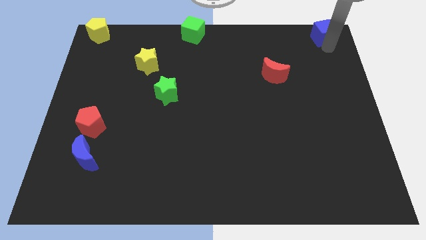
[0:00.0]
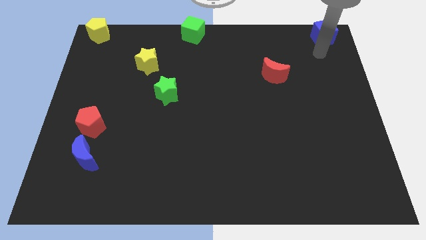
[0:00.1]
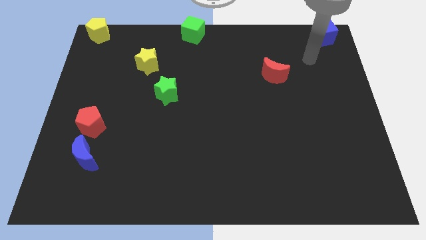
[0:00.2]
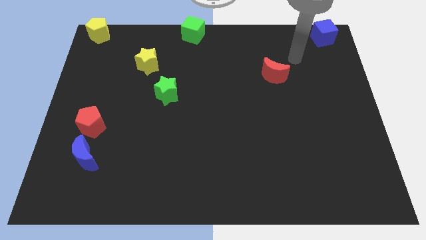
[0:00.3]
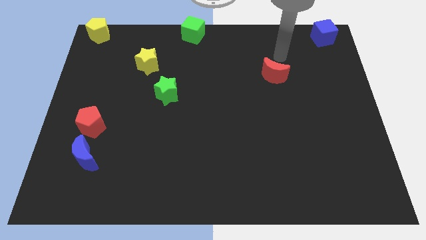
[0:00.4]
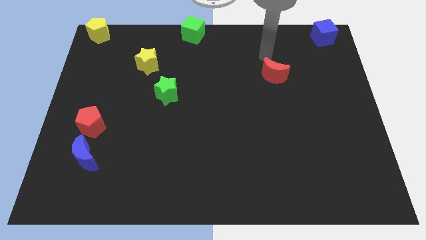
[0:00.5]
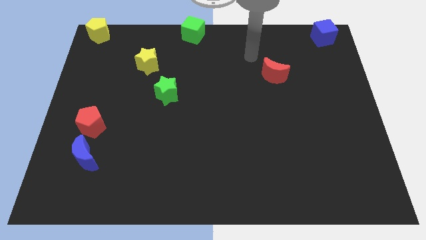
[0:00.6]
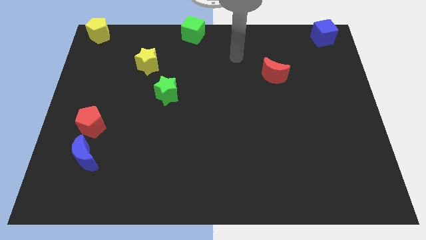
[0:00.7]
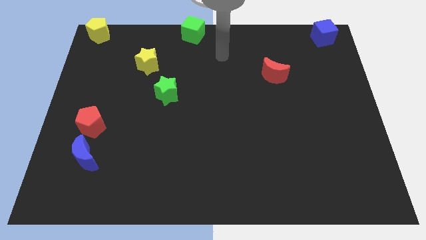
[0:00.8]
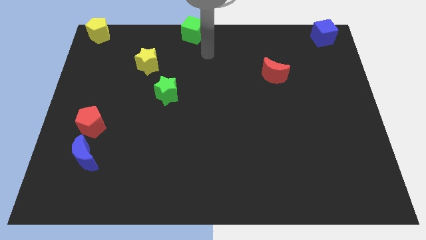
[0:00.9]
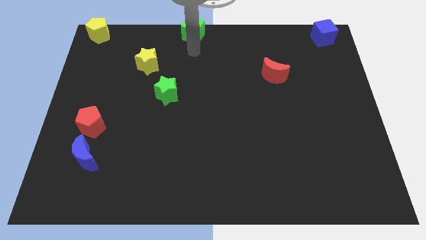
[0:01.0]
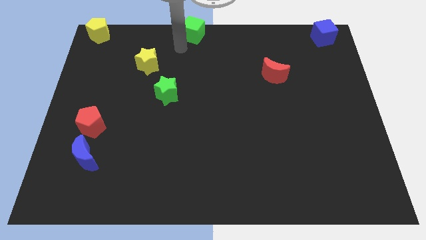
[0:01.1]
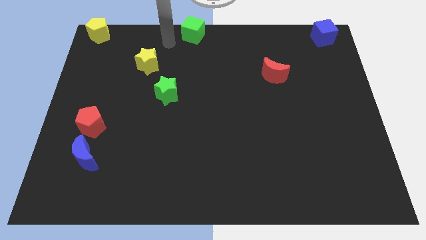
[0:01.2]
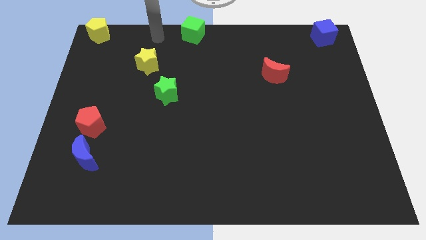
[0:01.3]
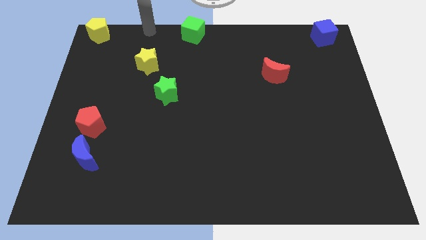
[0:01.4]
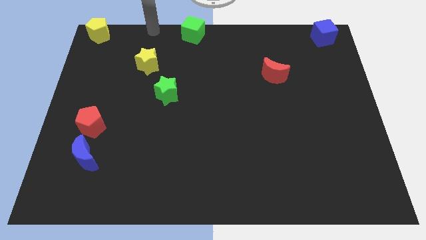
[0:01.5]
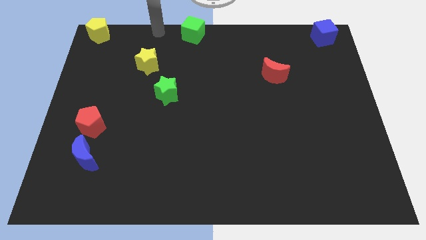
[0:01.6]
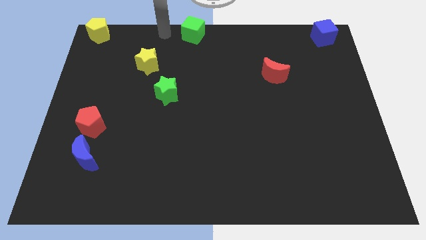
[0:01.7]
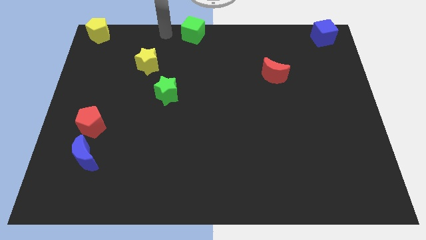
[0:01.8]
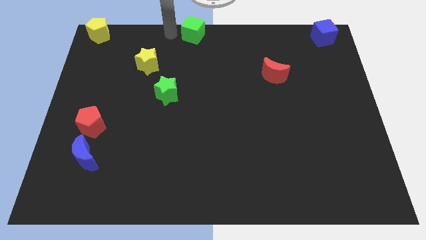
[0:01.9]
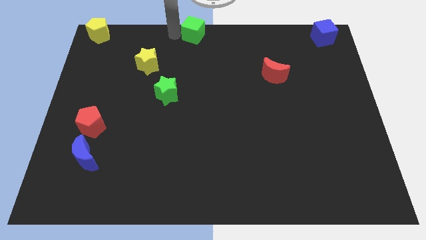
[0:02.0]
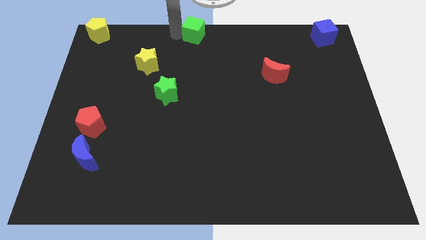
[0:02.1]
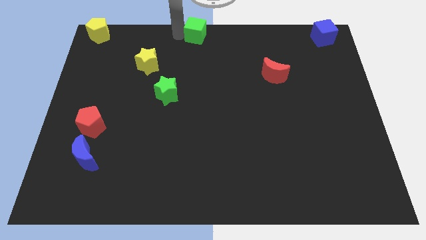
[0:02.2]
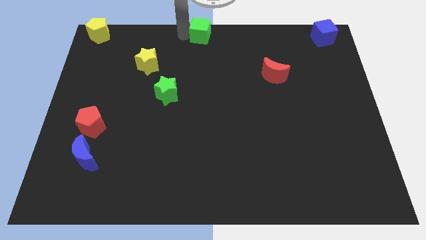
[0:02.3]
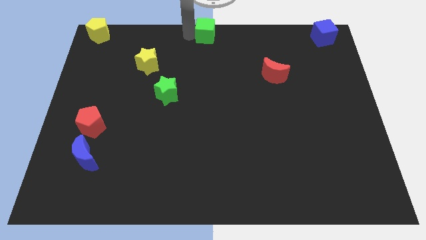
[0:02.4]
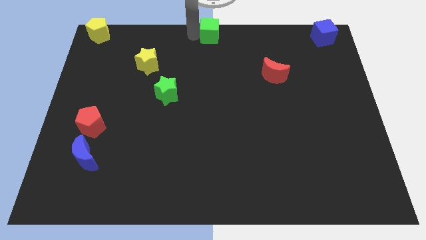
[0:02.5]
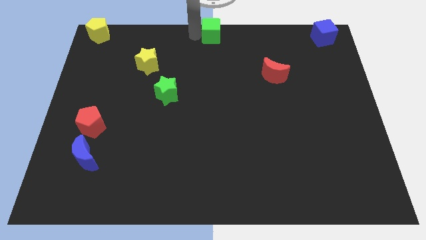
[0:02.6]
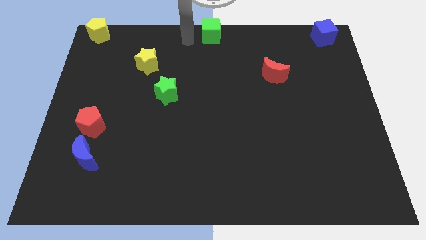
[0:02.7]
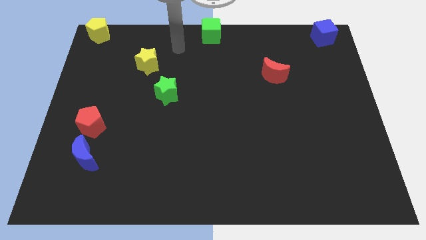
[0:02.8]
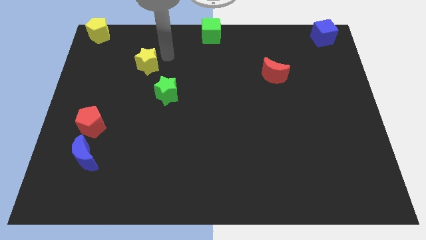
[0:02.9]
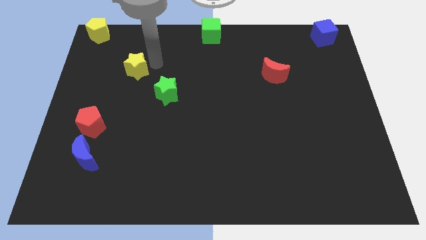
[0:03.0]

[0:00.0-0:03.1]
move the green cube to the top center of the board

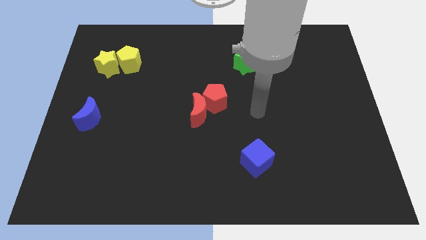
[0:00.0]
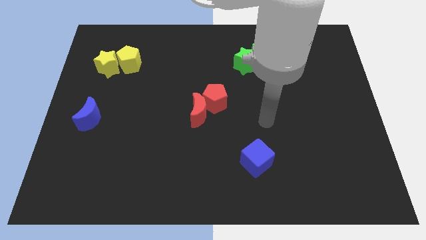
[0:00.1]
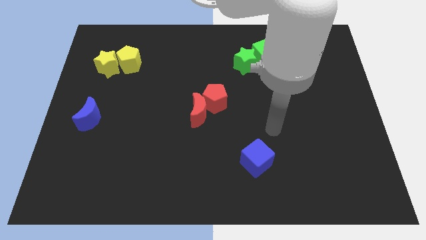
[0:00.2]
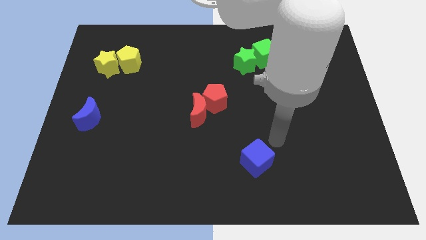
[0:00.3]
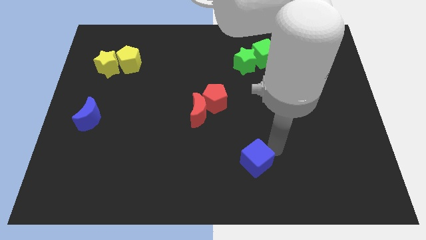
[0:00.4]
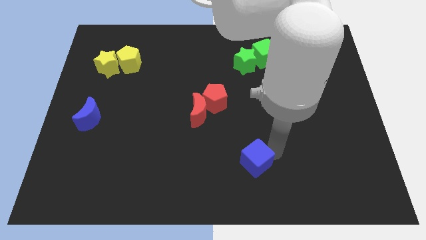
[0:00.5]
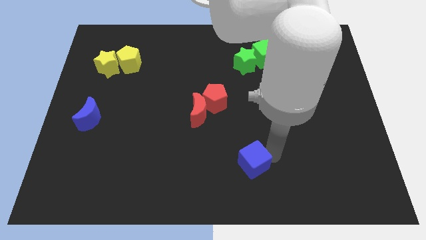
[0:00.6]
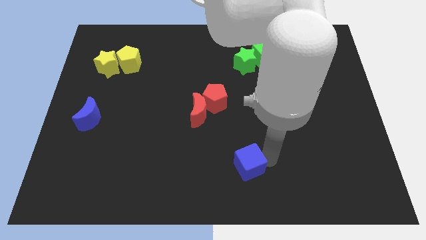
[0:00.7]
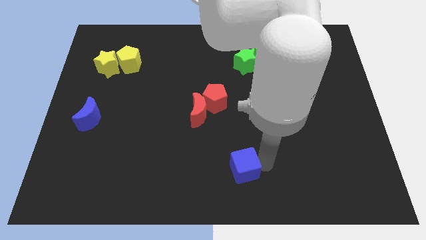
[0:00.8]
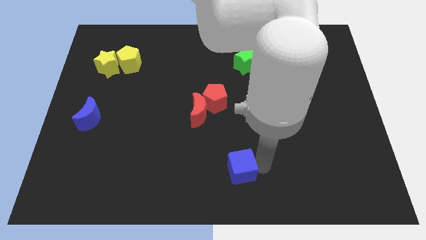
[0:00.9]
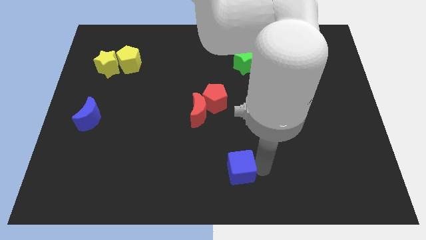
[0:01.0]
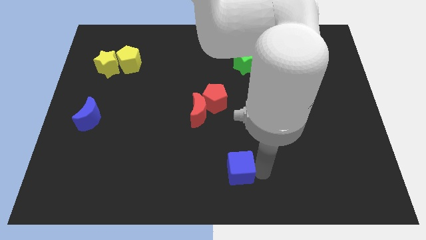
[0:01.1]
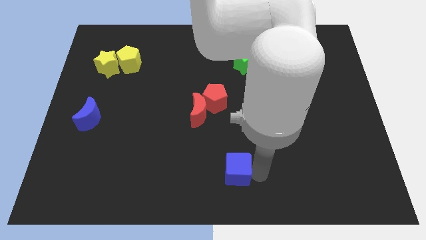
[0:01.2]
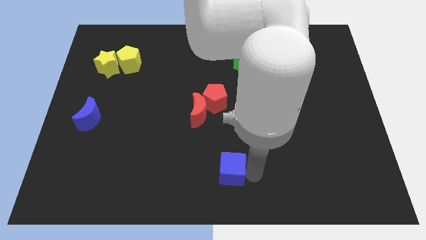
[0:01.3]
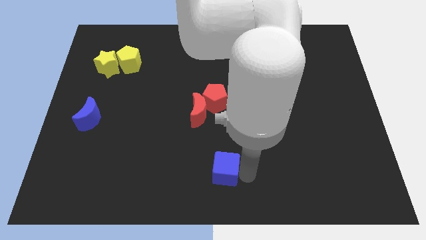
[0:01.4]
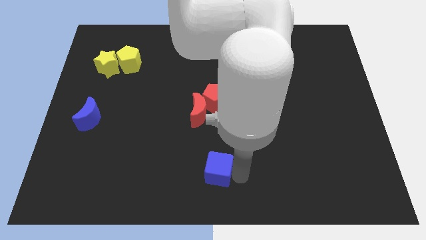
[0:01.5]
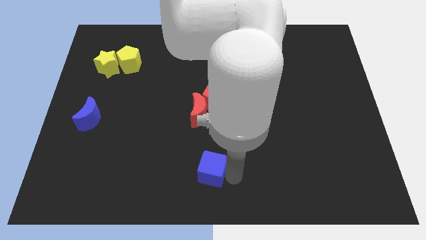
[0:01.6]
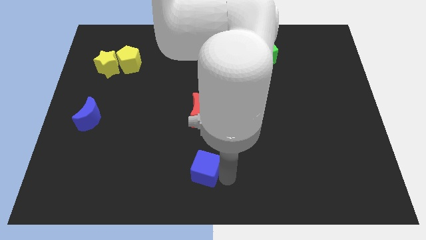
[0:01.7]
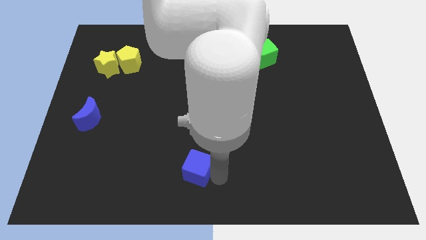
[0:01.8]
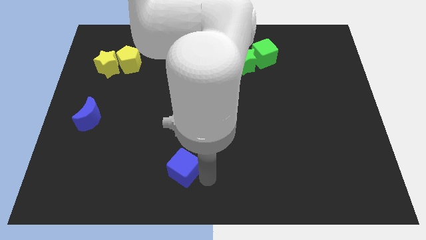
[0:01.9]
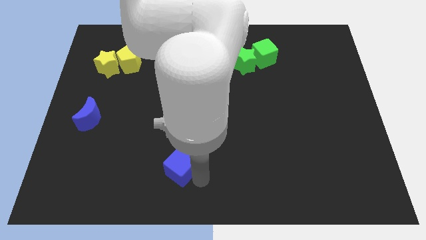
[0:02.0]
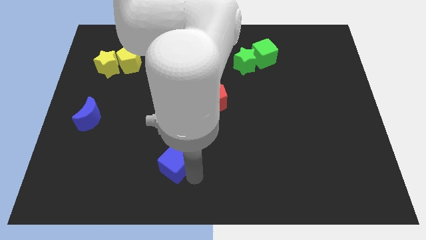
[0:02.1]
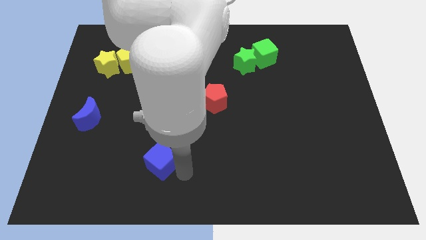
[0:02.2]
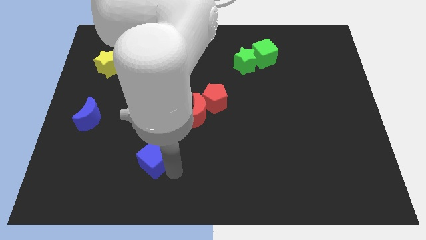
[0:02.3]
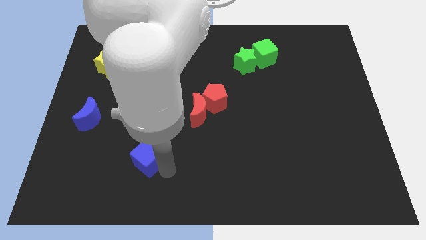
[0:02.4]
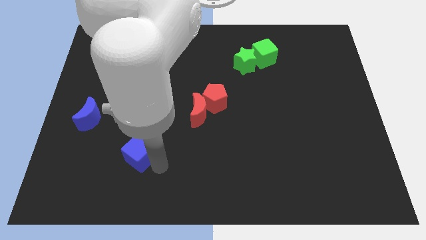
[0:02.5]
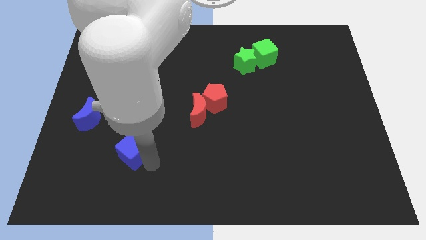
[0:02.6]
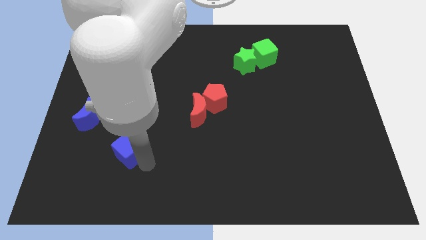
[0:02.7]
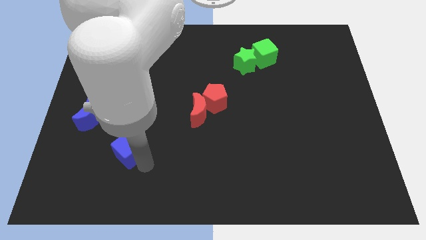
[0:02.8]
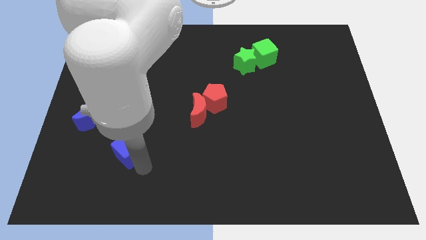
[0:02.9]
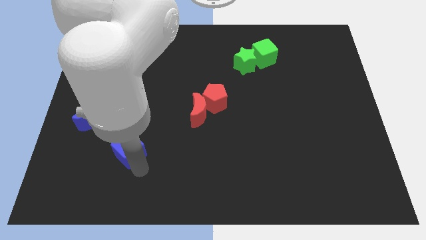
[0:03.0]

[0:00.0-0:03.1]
push the blue cube towards left

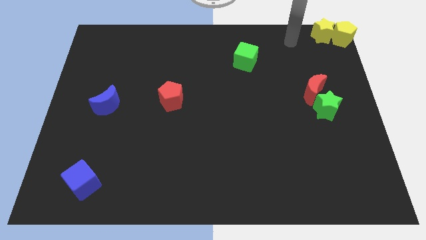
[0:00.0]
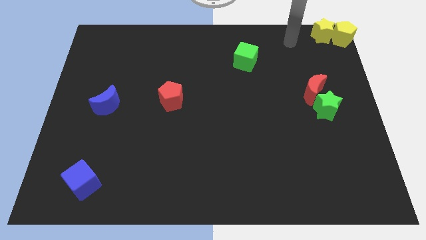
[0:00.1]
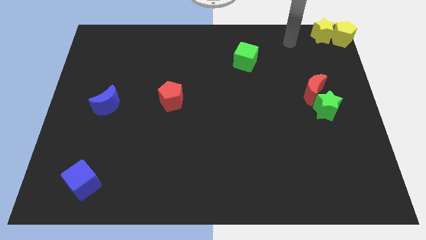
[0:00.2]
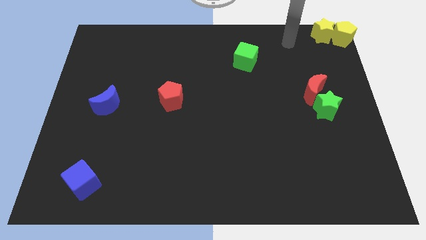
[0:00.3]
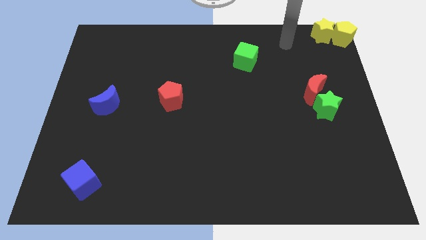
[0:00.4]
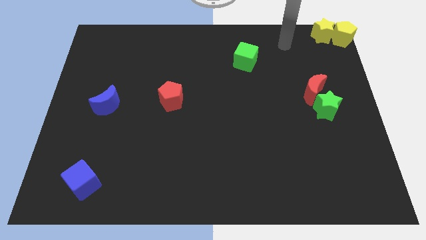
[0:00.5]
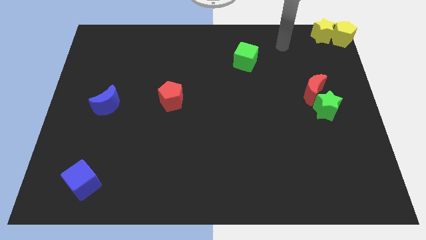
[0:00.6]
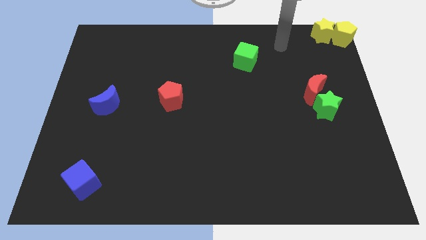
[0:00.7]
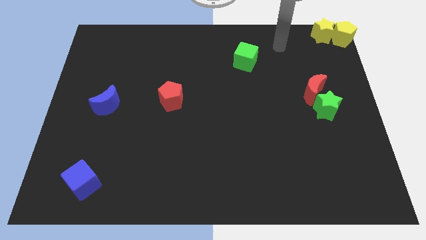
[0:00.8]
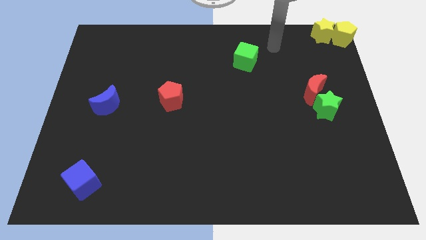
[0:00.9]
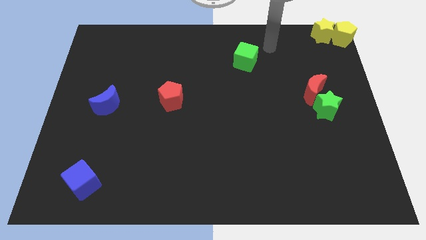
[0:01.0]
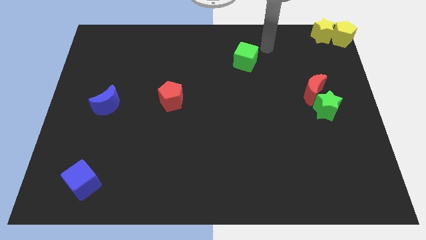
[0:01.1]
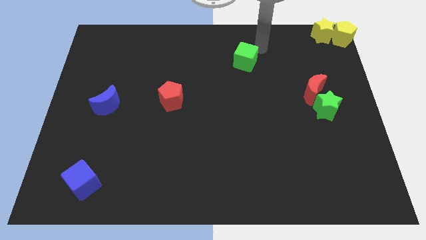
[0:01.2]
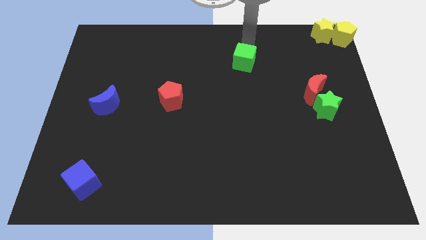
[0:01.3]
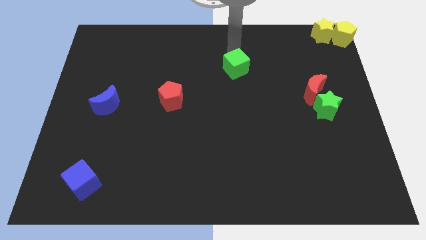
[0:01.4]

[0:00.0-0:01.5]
slightly push the green cube

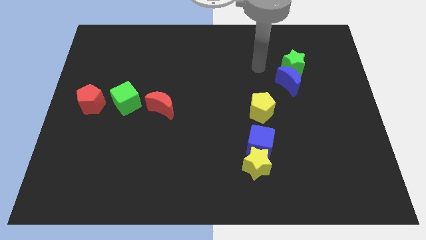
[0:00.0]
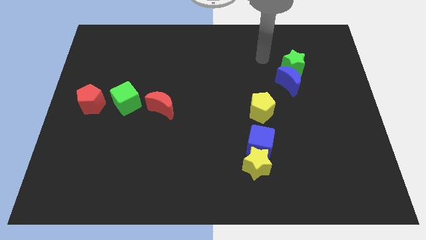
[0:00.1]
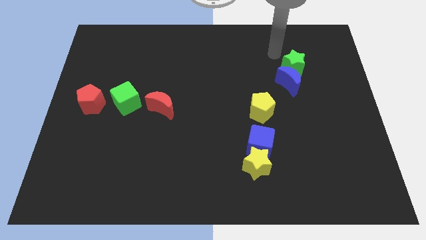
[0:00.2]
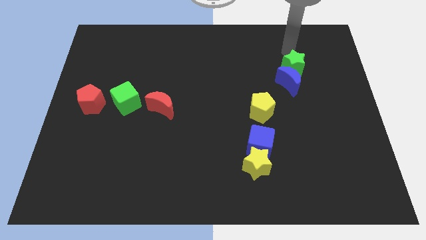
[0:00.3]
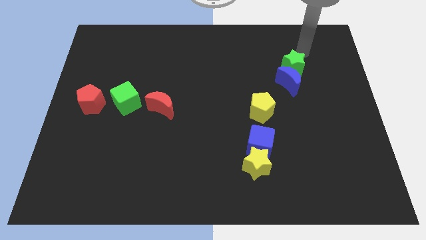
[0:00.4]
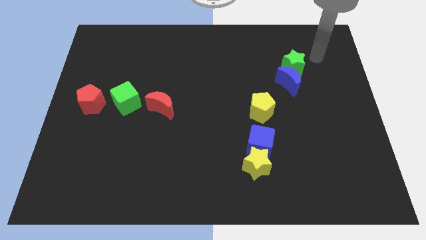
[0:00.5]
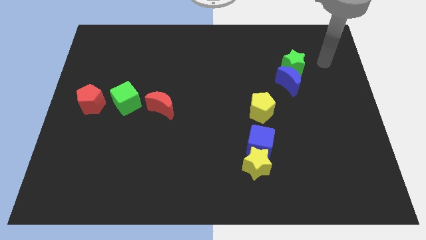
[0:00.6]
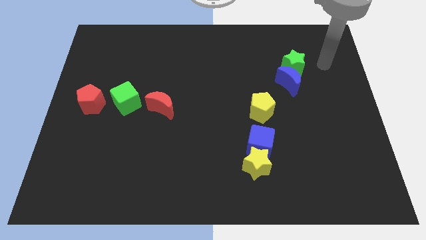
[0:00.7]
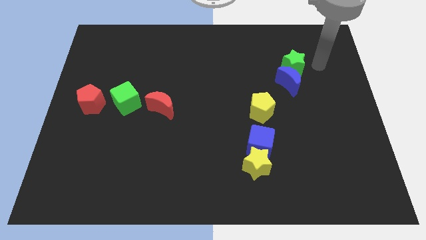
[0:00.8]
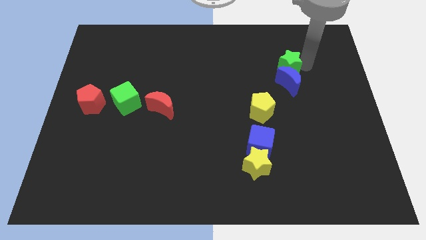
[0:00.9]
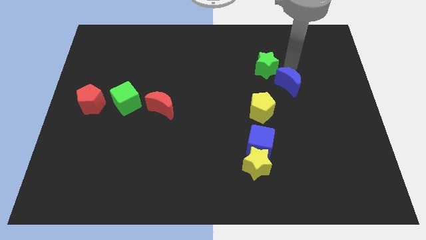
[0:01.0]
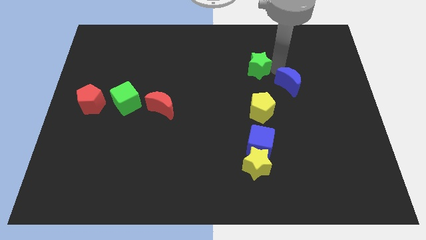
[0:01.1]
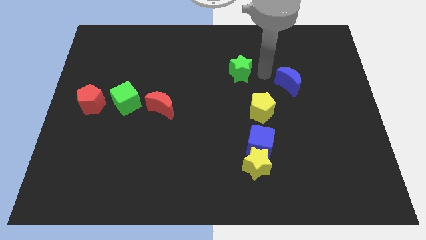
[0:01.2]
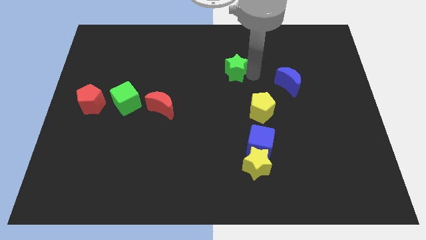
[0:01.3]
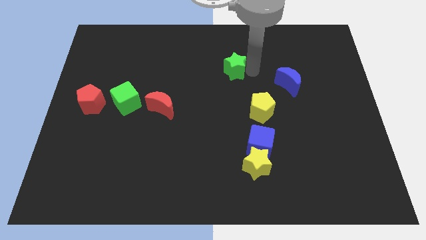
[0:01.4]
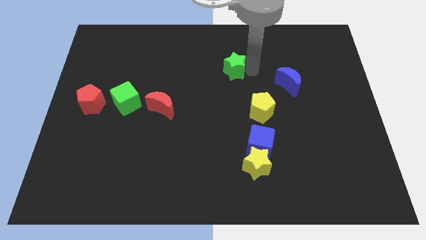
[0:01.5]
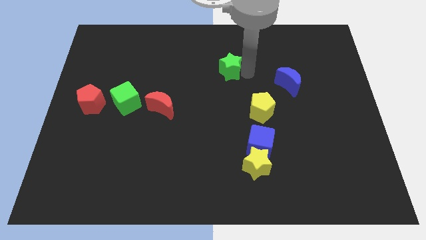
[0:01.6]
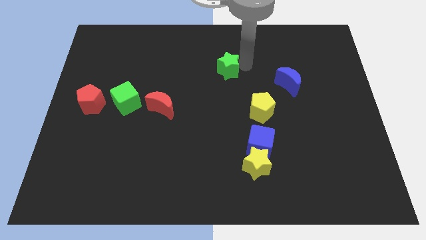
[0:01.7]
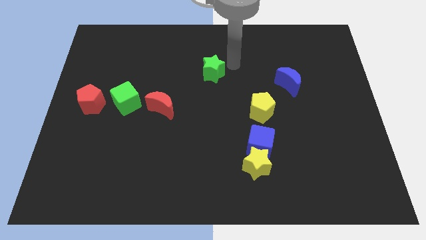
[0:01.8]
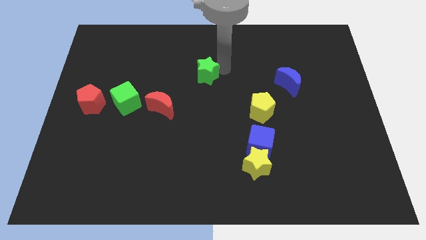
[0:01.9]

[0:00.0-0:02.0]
move the green star towards the left side of the board
